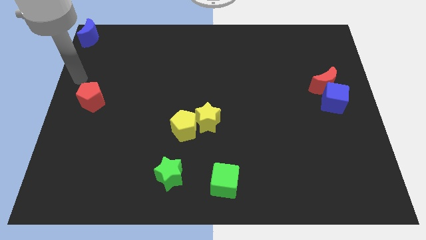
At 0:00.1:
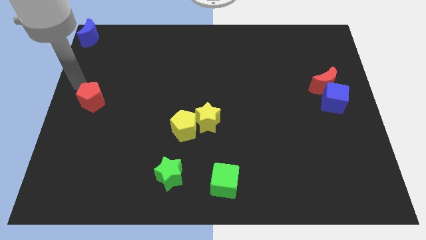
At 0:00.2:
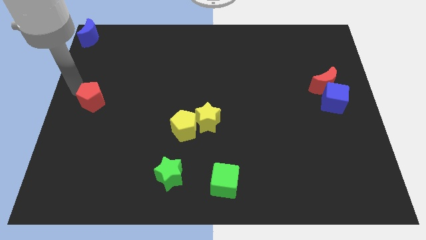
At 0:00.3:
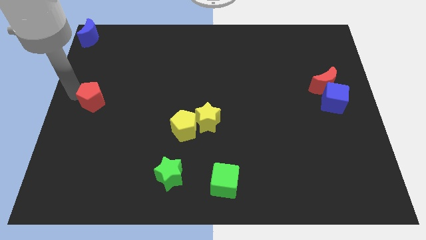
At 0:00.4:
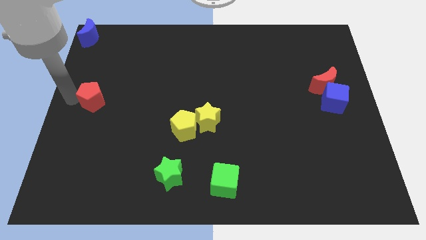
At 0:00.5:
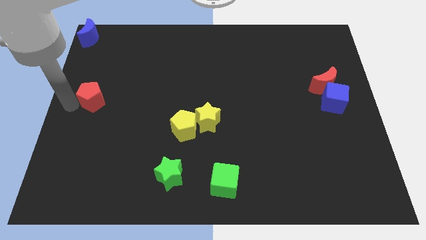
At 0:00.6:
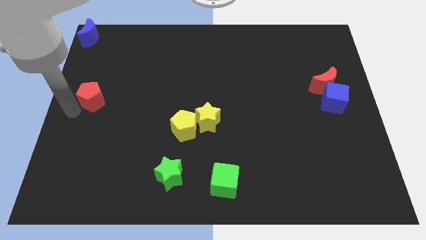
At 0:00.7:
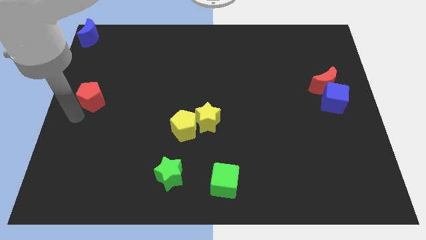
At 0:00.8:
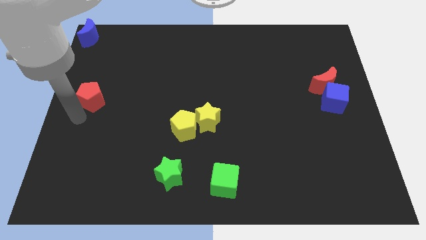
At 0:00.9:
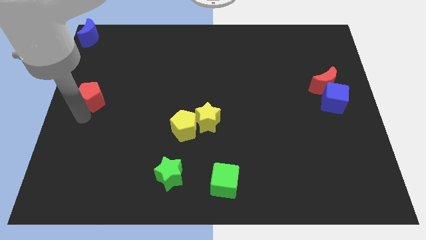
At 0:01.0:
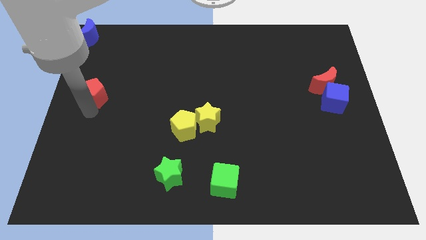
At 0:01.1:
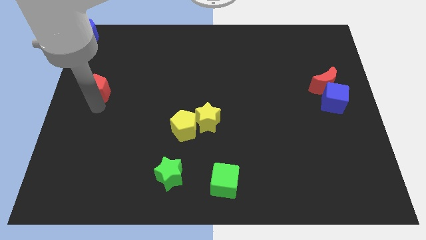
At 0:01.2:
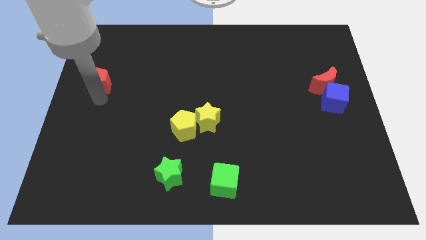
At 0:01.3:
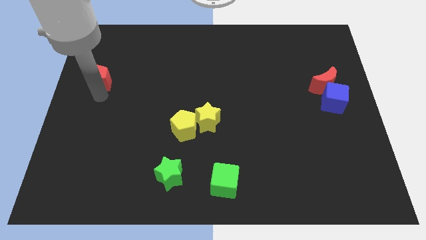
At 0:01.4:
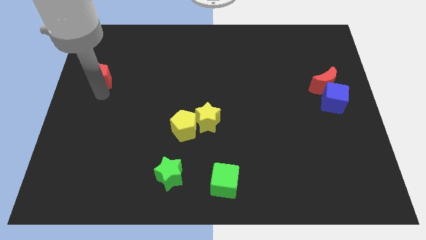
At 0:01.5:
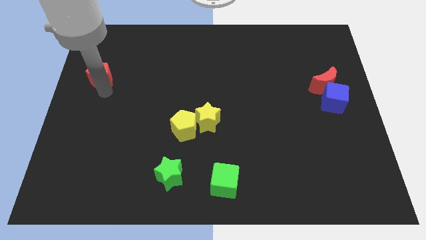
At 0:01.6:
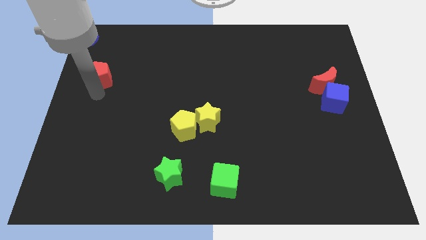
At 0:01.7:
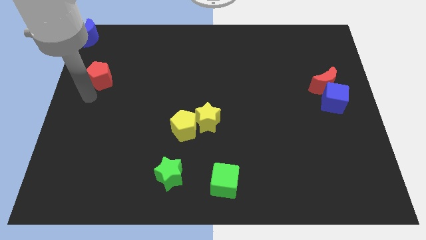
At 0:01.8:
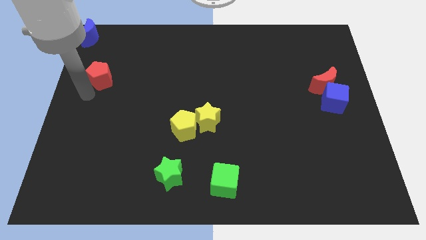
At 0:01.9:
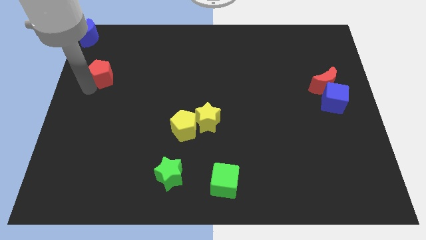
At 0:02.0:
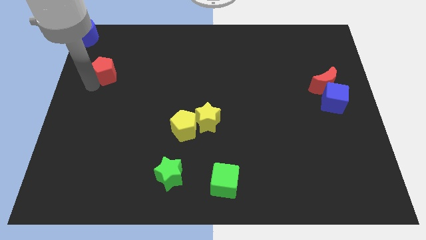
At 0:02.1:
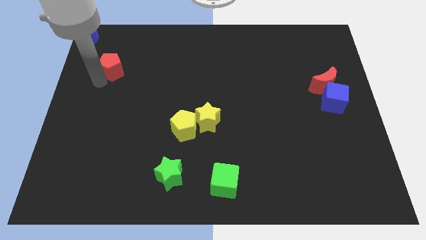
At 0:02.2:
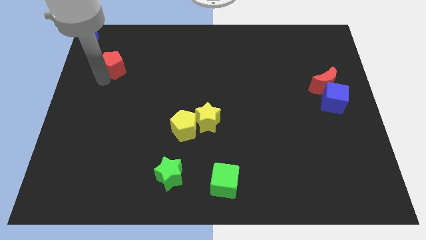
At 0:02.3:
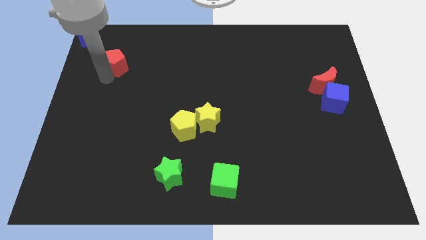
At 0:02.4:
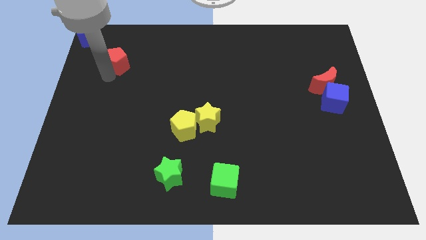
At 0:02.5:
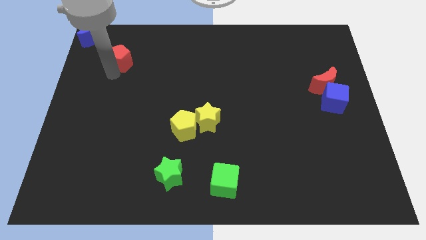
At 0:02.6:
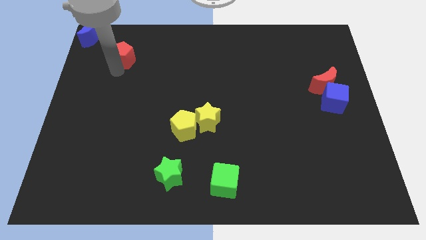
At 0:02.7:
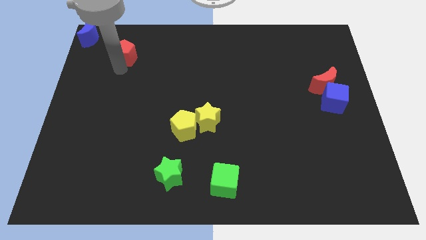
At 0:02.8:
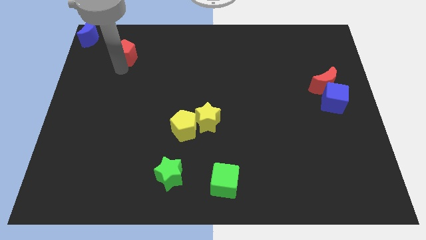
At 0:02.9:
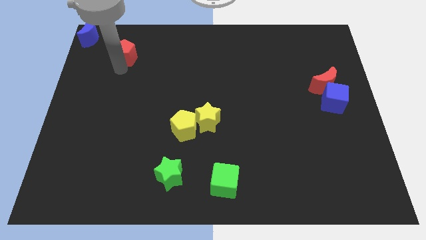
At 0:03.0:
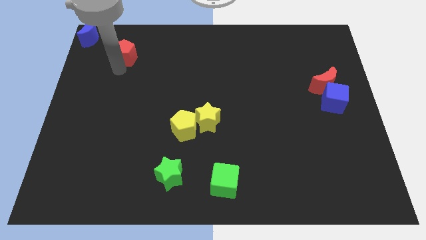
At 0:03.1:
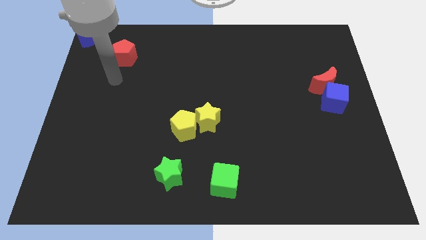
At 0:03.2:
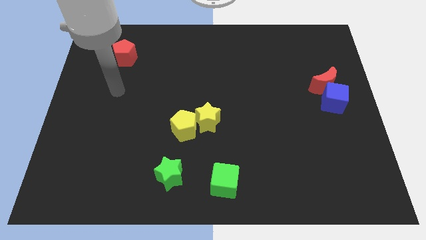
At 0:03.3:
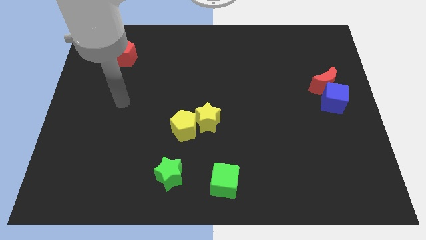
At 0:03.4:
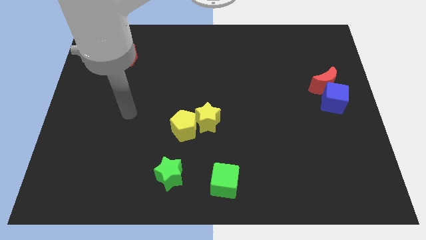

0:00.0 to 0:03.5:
push red pentagon on bottom right to blue crescent

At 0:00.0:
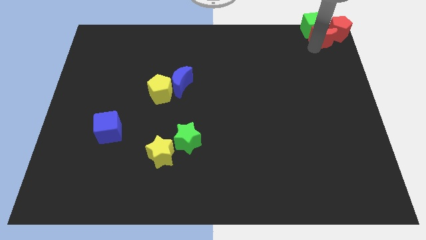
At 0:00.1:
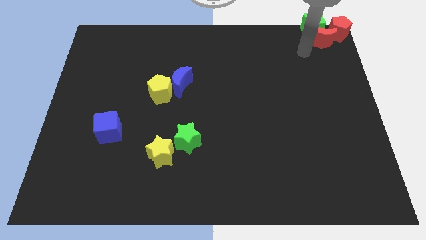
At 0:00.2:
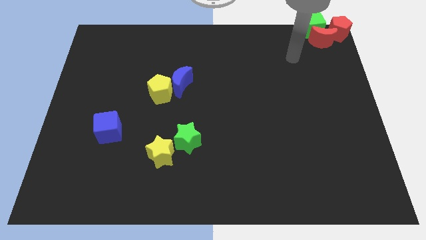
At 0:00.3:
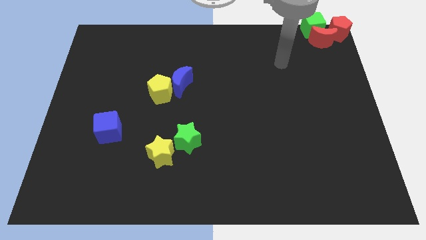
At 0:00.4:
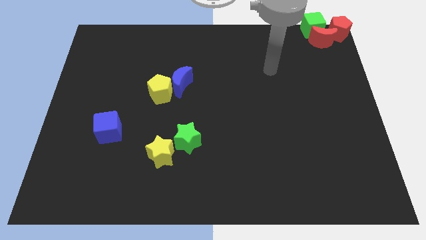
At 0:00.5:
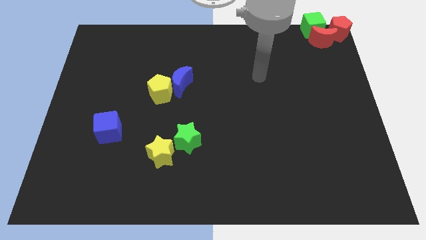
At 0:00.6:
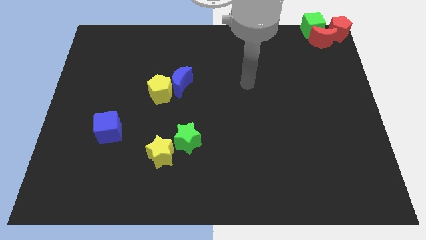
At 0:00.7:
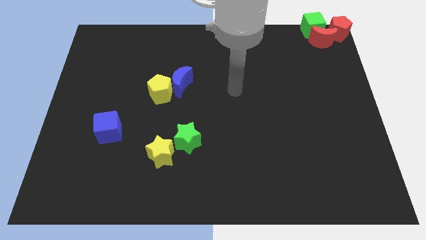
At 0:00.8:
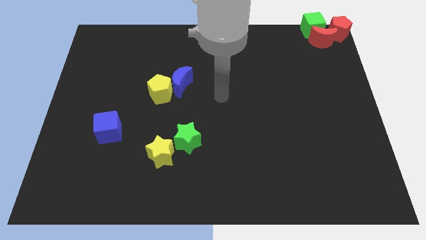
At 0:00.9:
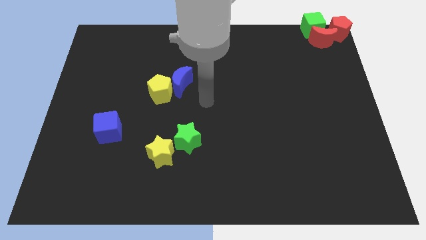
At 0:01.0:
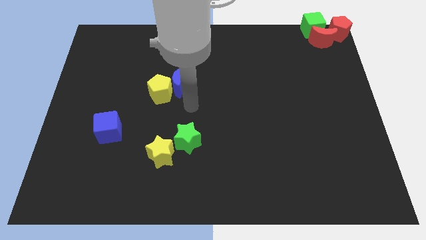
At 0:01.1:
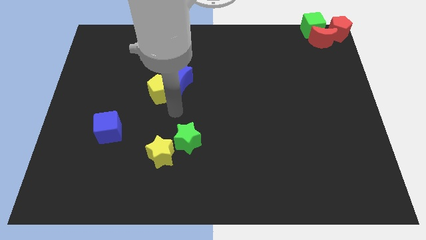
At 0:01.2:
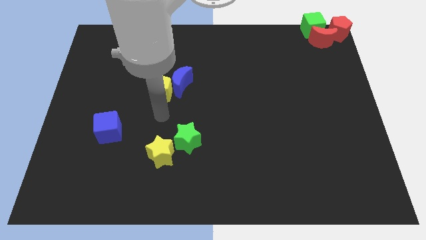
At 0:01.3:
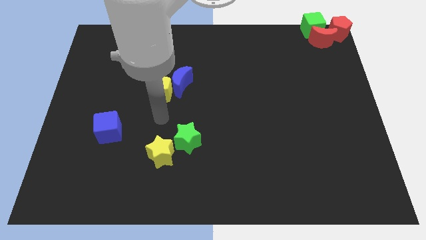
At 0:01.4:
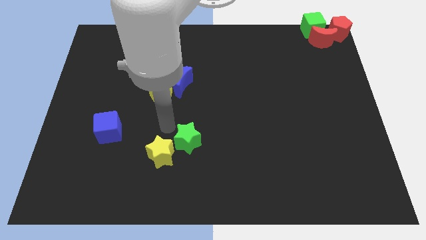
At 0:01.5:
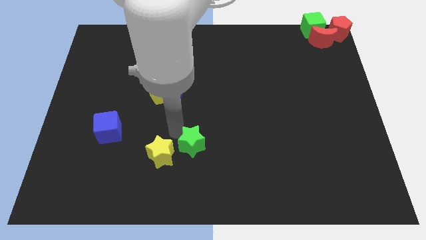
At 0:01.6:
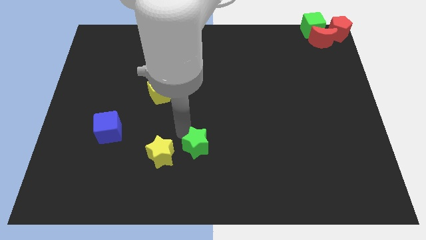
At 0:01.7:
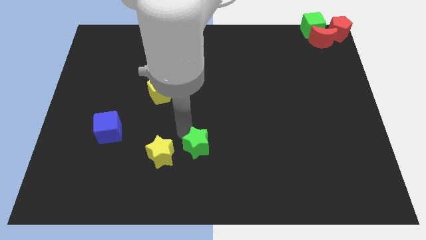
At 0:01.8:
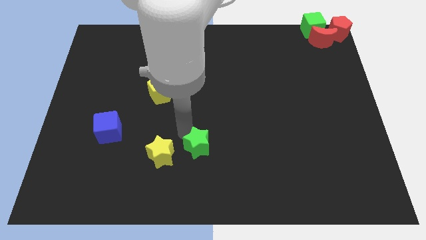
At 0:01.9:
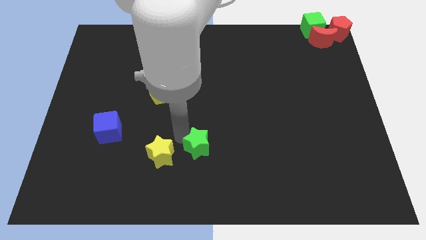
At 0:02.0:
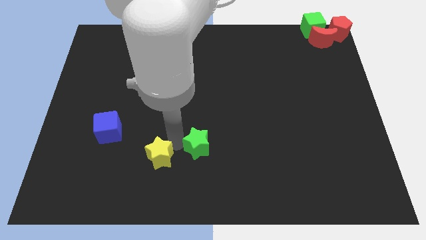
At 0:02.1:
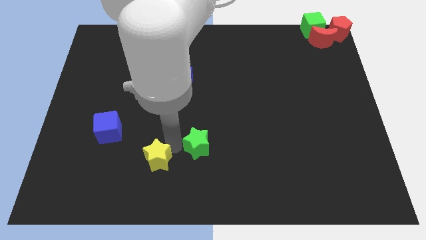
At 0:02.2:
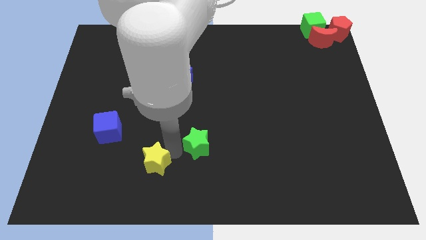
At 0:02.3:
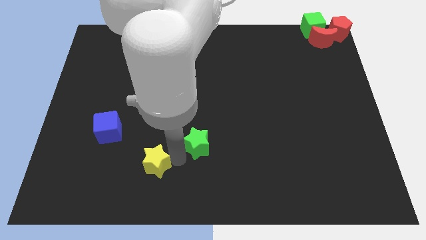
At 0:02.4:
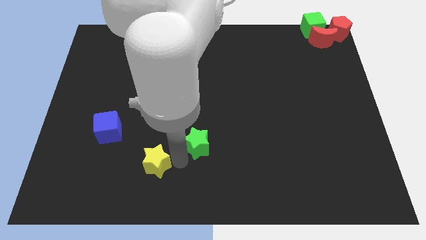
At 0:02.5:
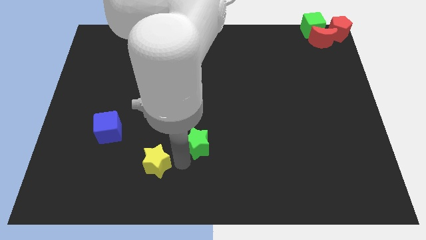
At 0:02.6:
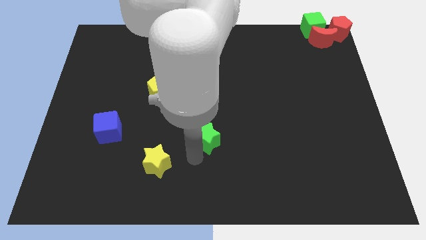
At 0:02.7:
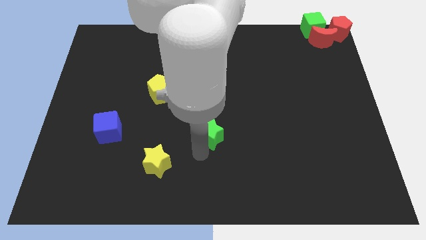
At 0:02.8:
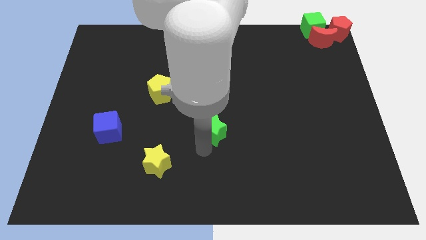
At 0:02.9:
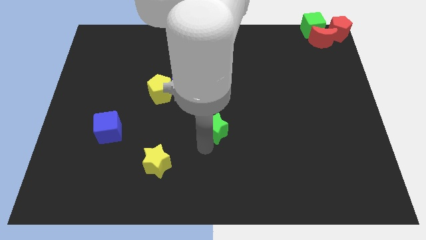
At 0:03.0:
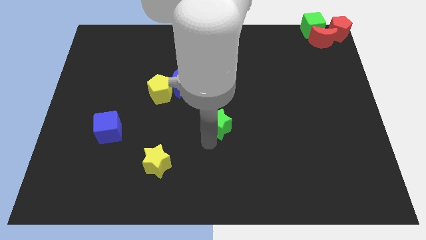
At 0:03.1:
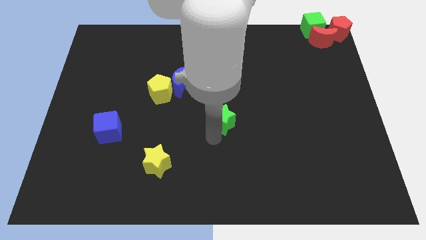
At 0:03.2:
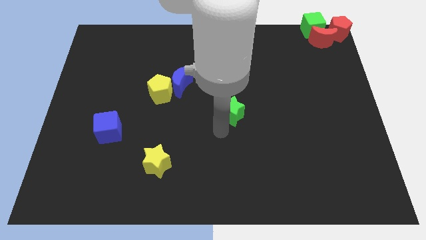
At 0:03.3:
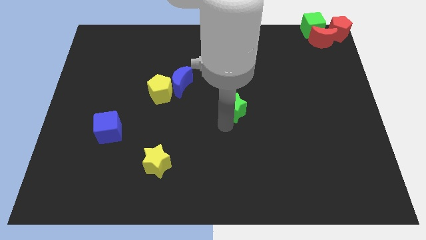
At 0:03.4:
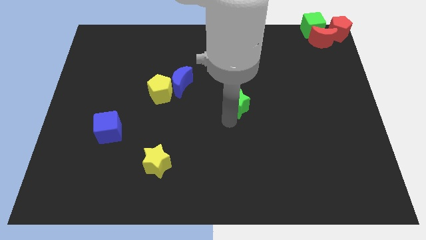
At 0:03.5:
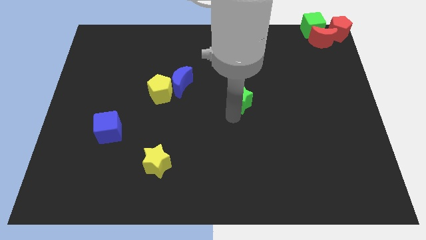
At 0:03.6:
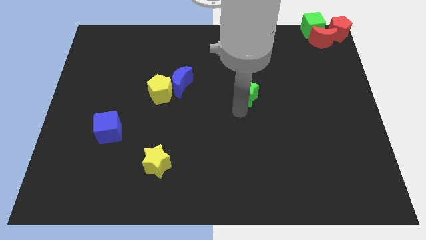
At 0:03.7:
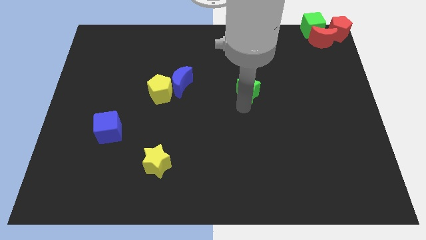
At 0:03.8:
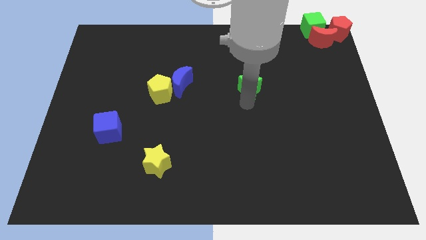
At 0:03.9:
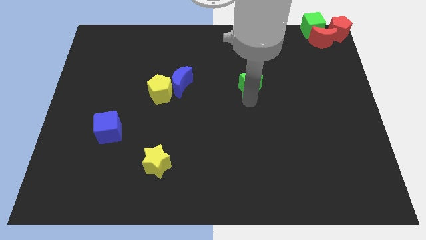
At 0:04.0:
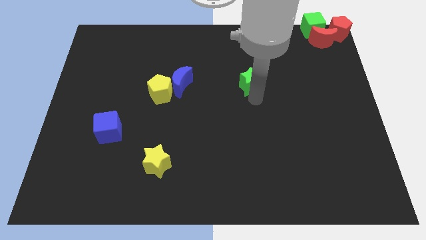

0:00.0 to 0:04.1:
move the green star horizontal to the blue crescent

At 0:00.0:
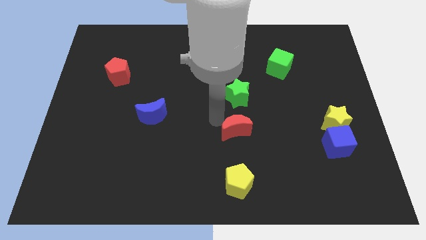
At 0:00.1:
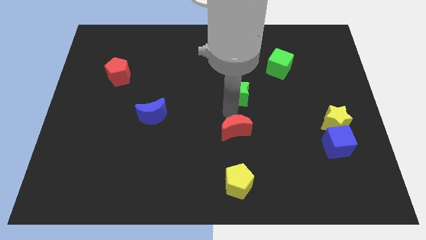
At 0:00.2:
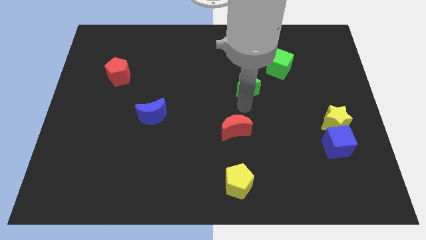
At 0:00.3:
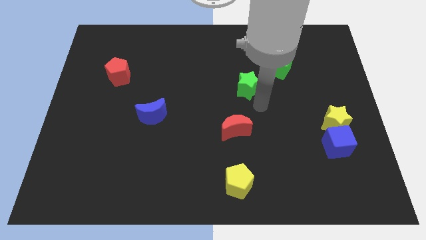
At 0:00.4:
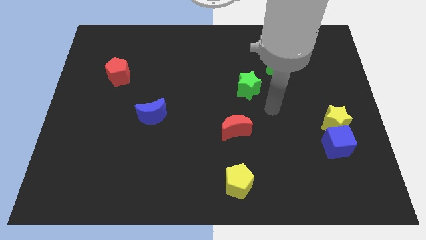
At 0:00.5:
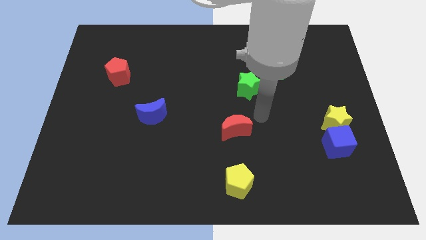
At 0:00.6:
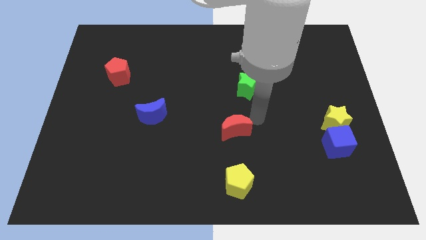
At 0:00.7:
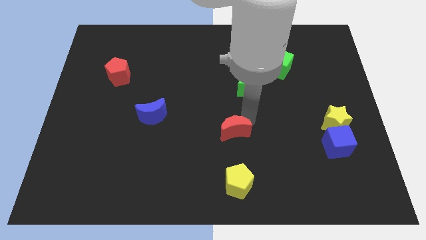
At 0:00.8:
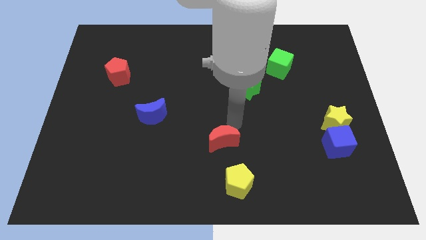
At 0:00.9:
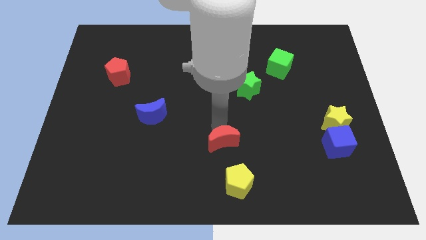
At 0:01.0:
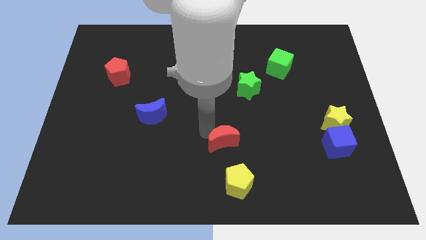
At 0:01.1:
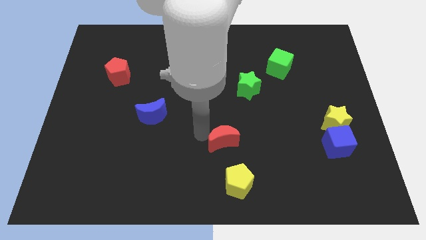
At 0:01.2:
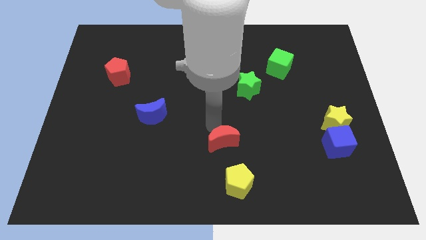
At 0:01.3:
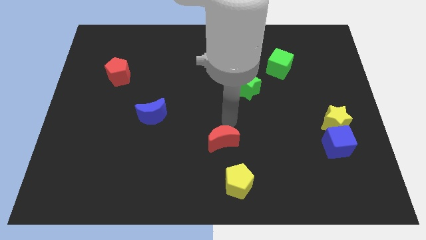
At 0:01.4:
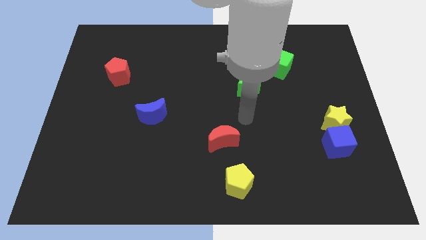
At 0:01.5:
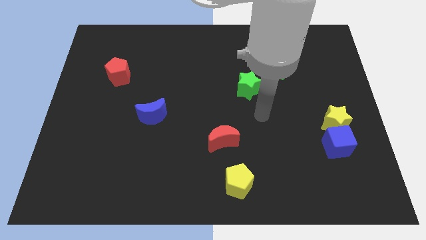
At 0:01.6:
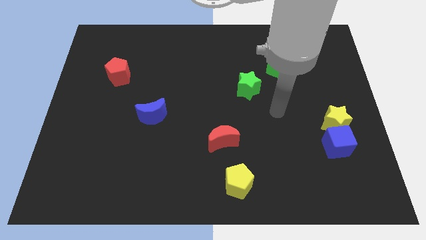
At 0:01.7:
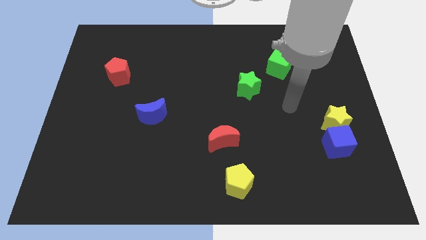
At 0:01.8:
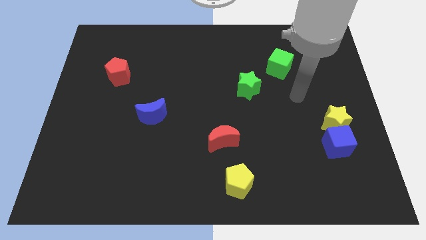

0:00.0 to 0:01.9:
move the red crescent slightly to the bottom side
